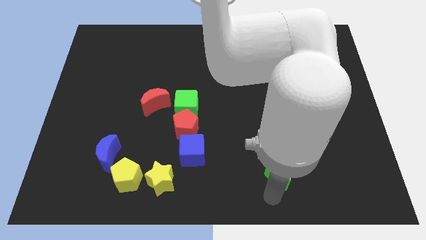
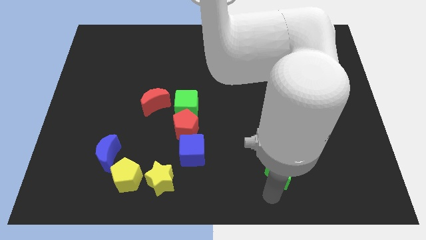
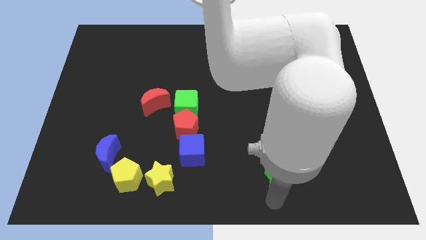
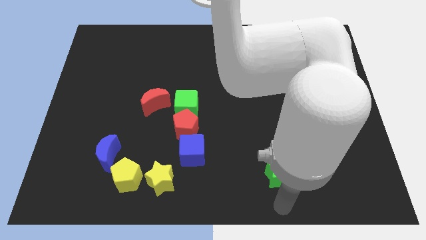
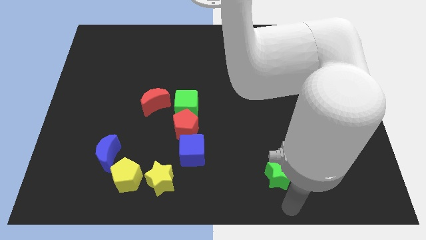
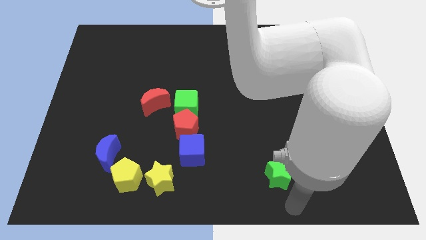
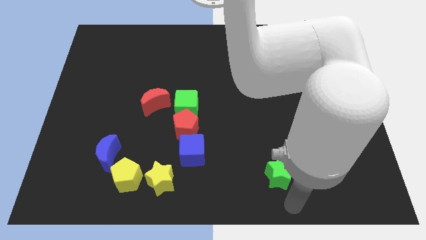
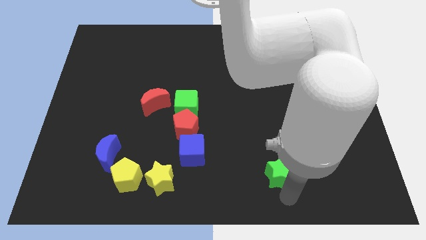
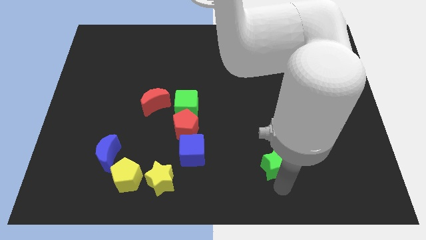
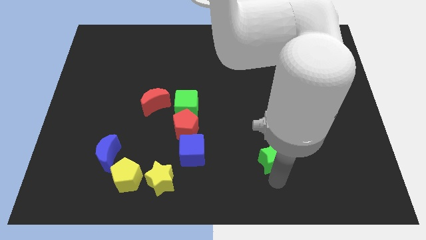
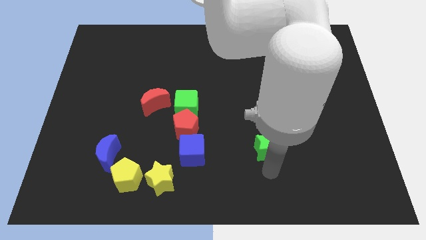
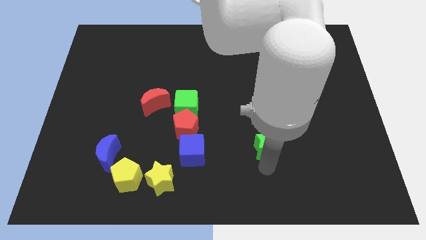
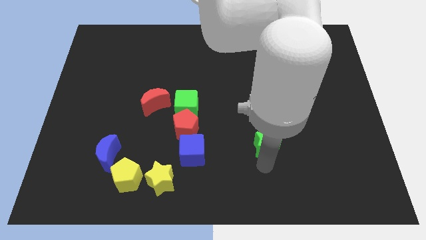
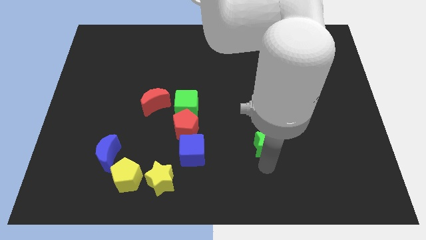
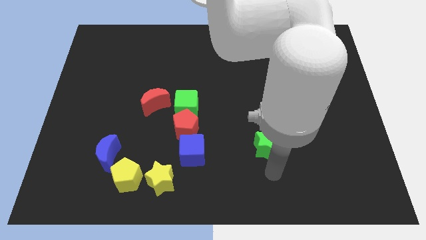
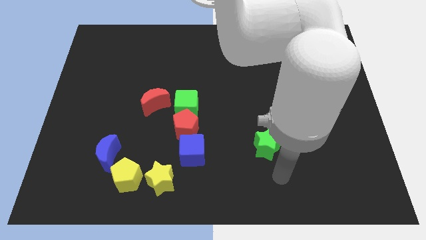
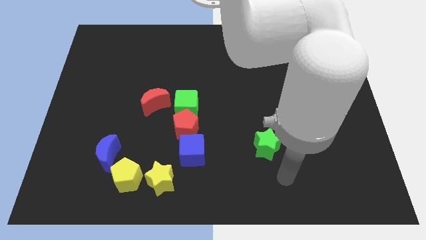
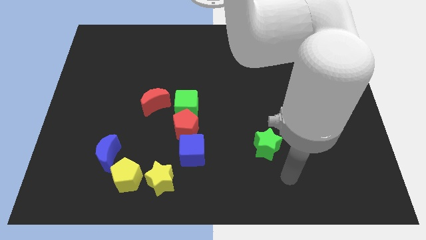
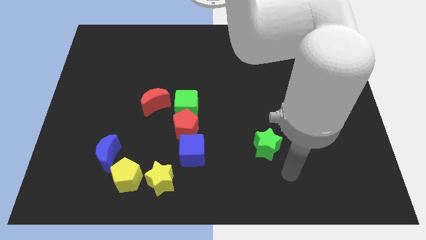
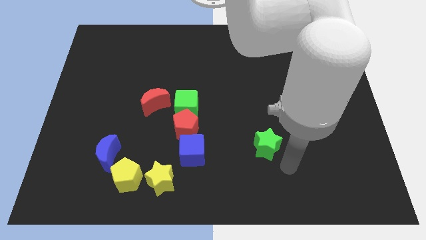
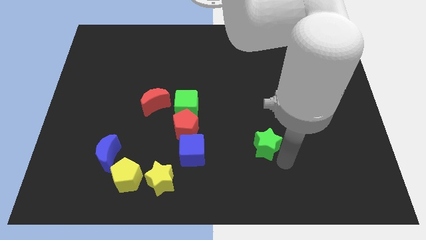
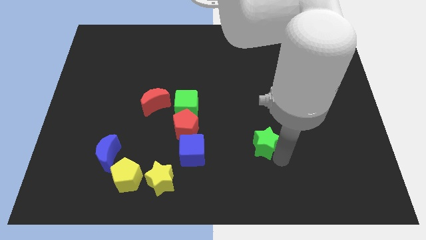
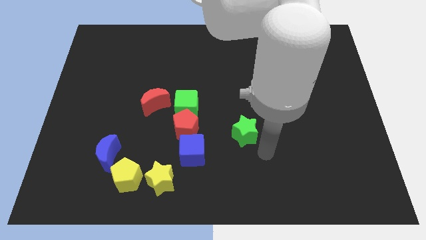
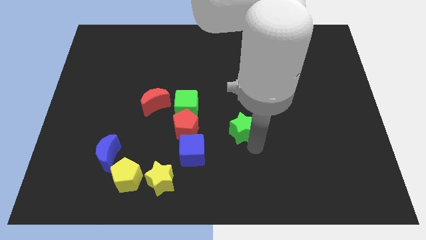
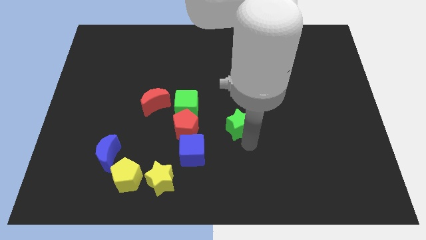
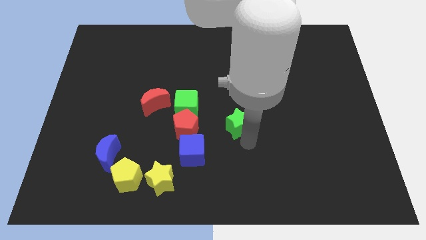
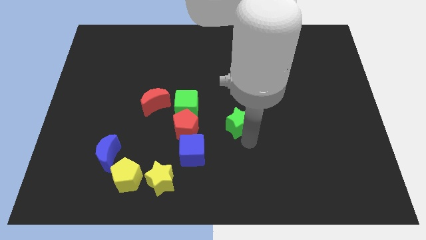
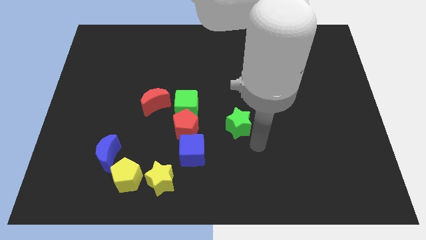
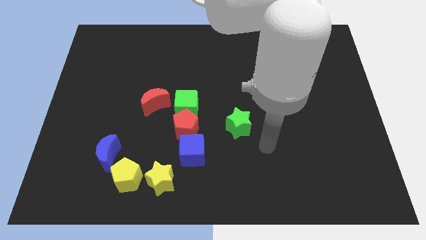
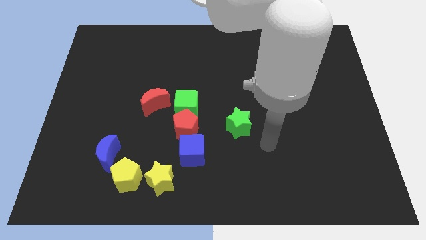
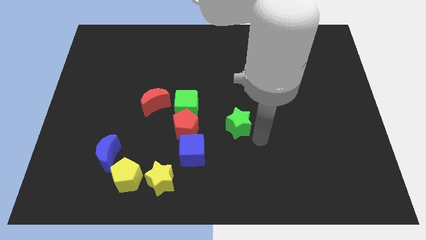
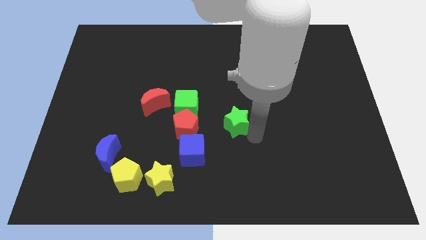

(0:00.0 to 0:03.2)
move green star to the right side of the red pentagon

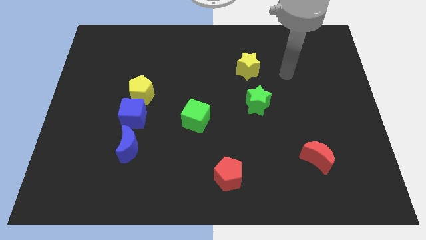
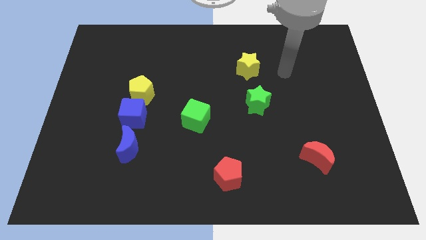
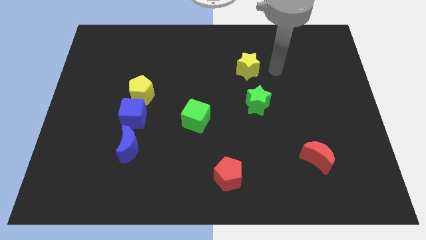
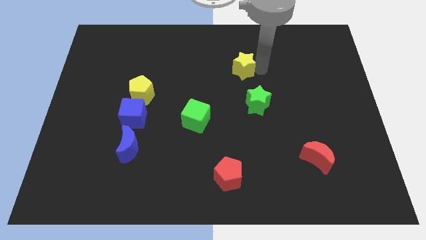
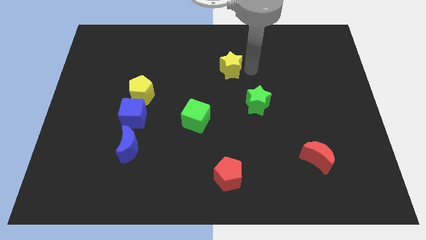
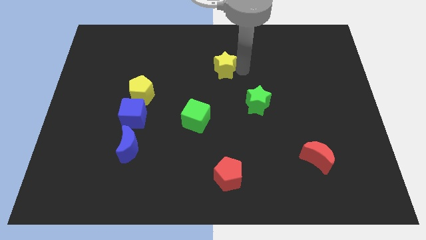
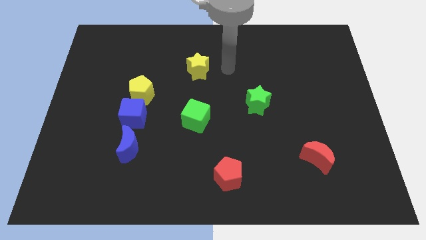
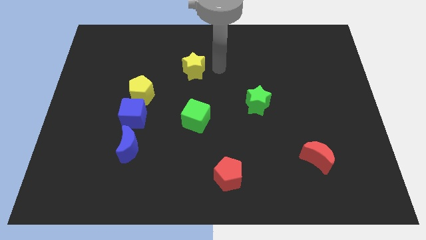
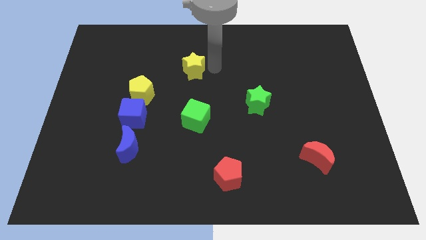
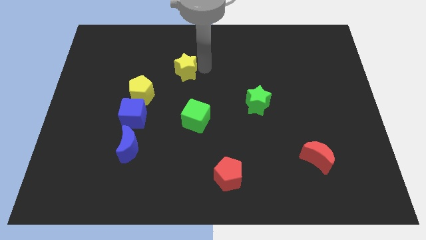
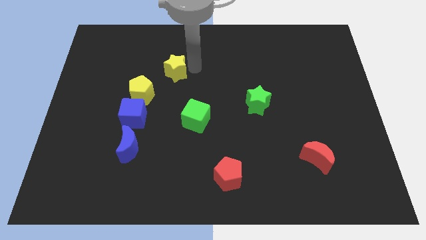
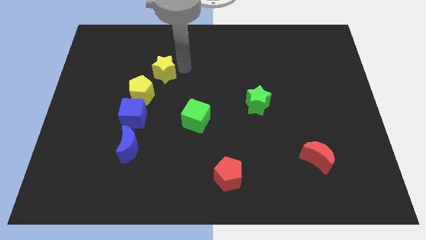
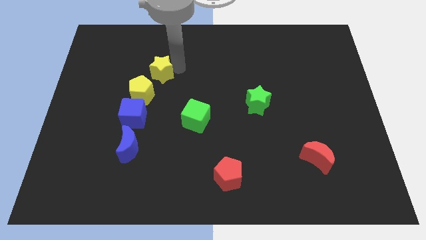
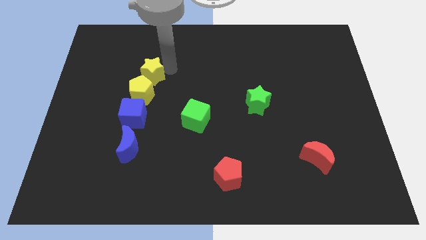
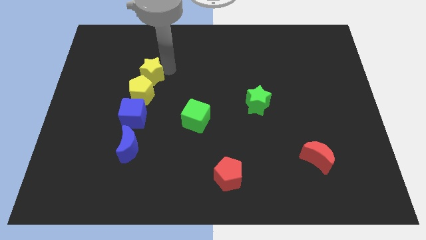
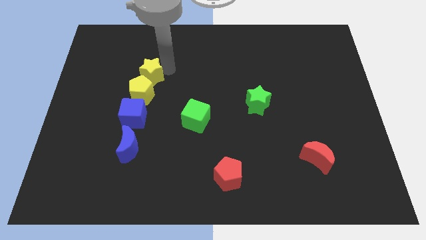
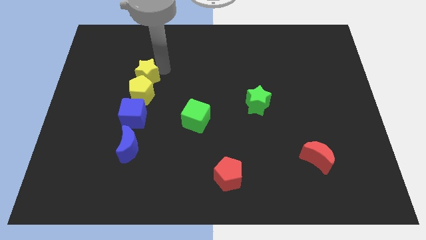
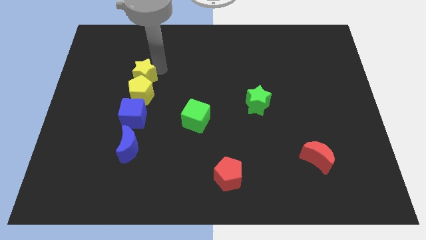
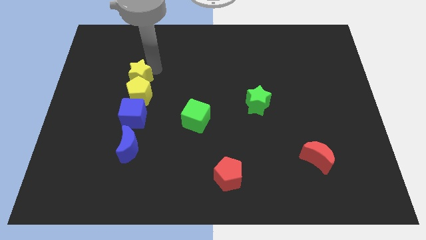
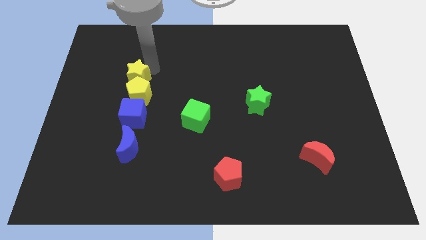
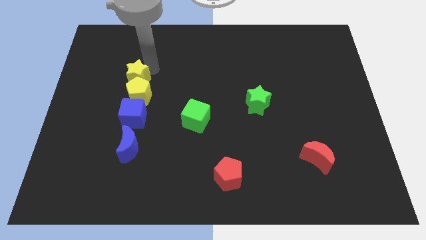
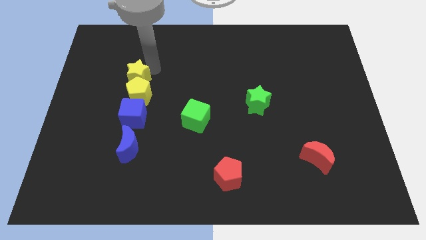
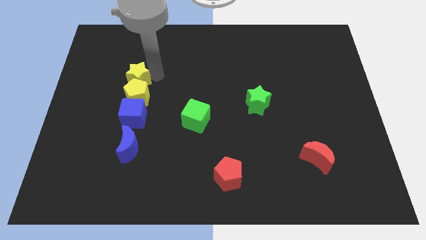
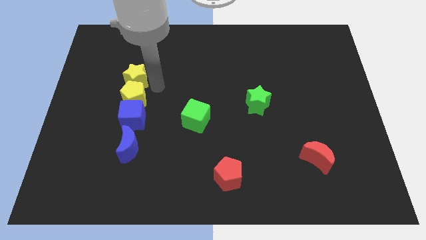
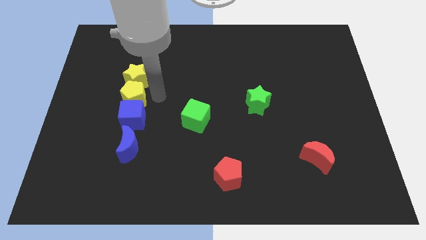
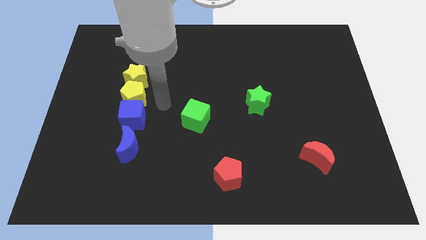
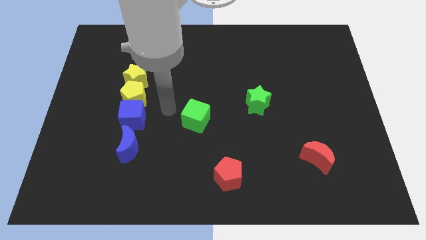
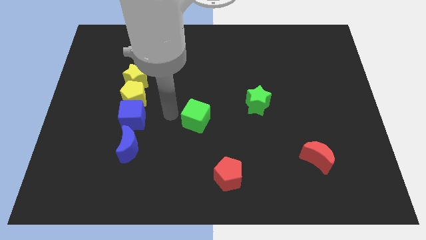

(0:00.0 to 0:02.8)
push the yellow star into the top of the yellow pentagon

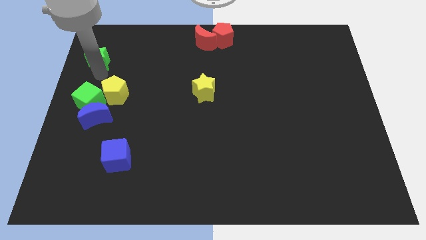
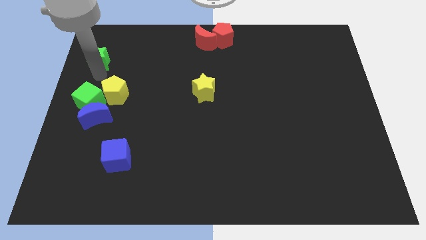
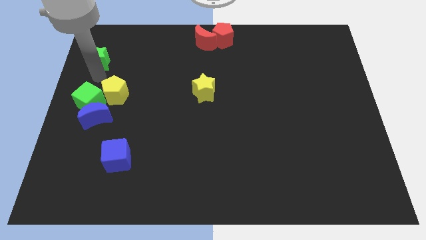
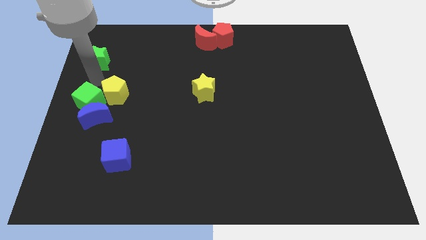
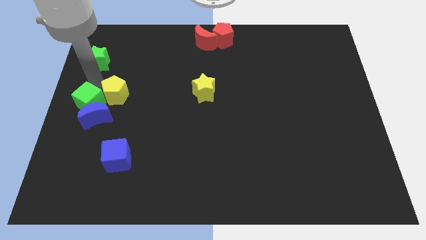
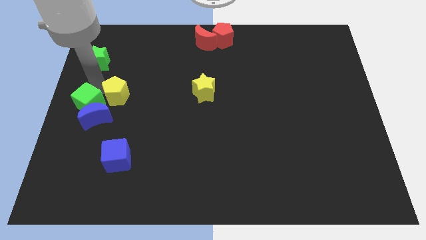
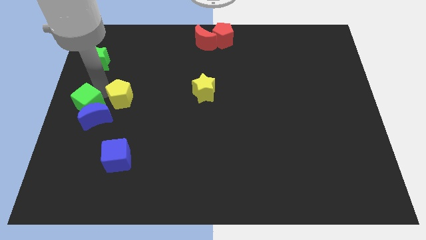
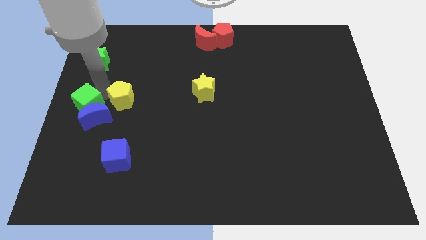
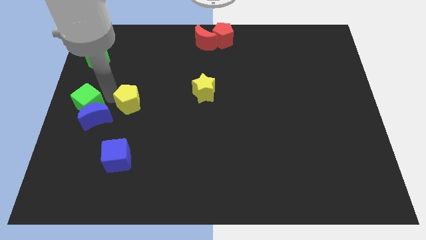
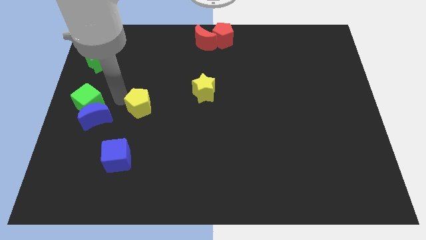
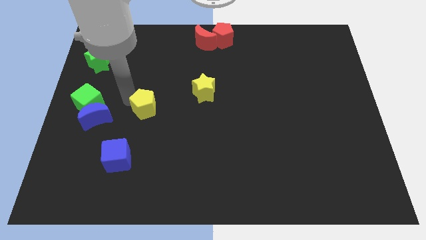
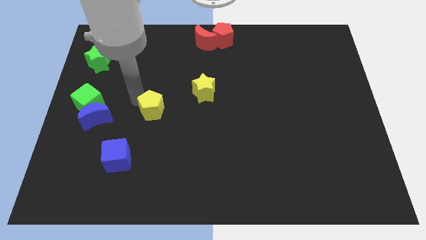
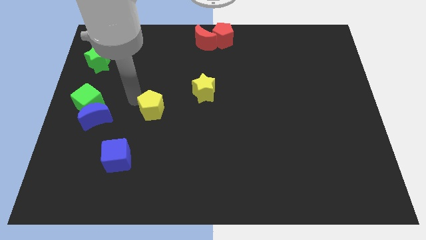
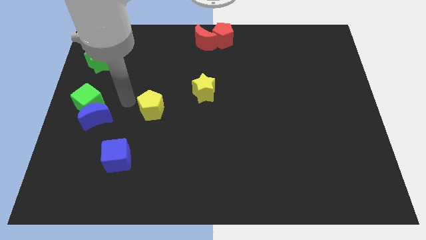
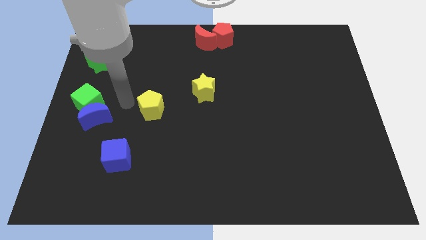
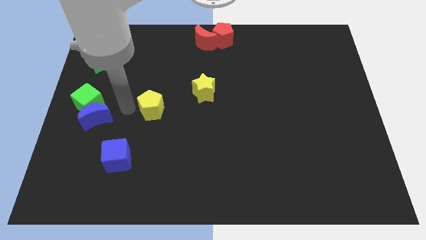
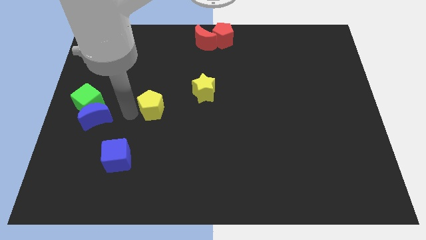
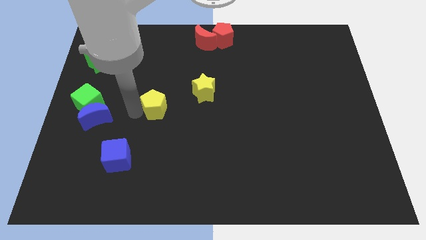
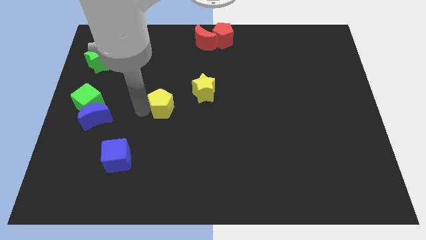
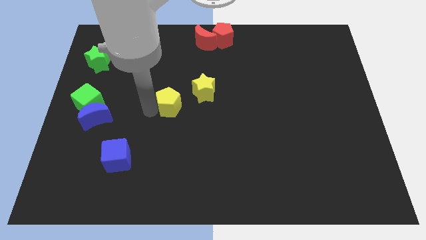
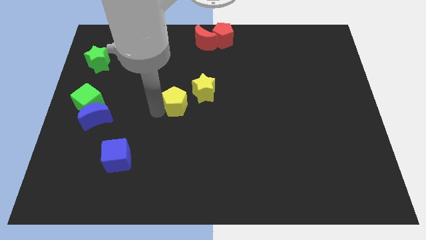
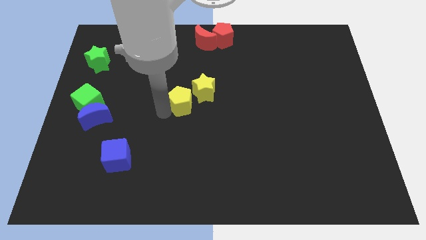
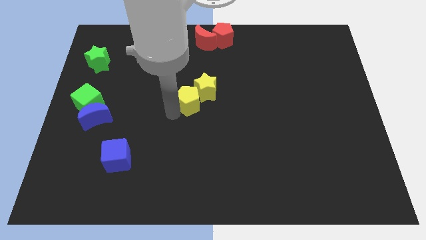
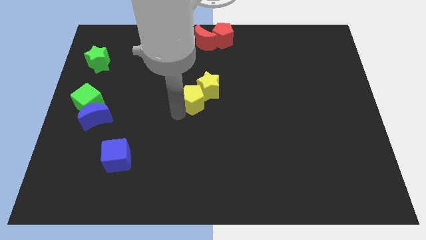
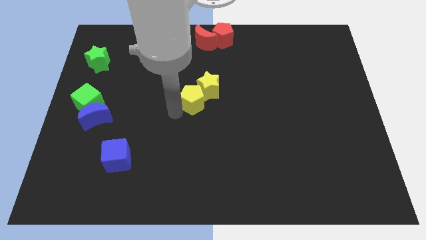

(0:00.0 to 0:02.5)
push the yellow pentagon to the bottom left of the yellow star

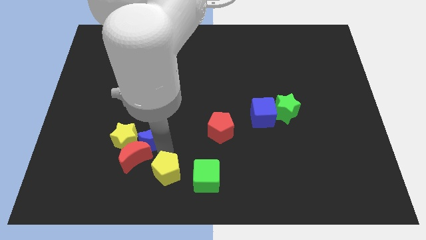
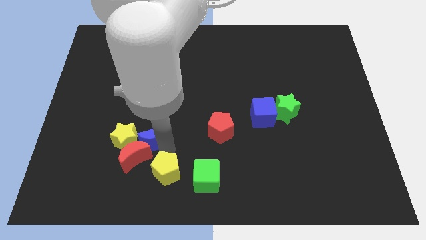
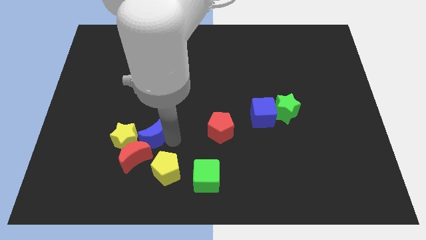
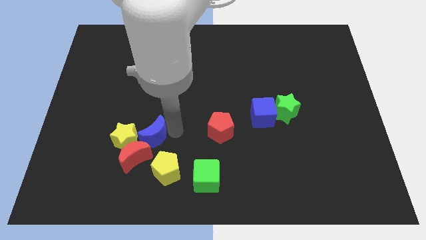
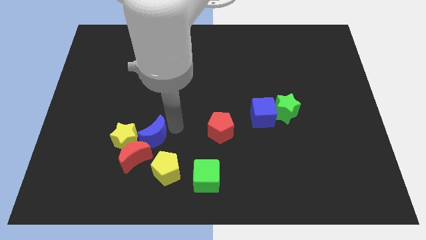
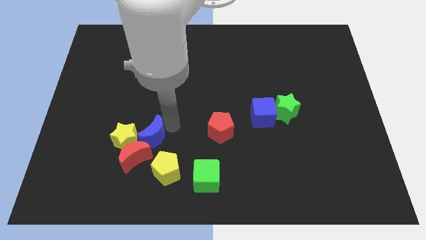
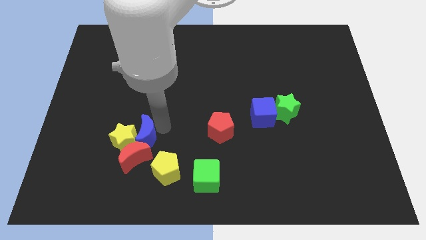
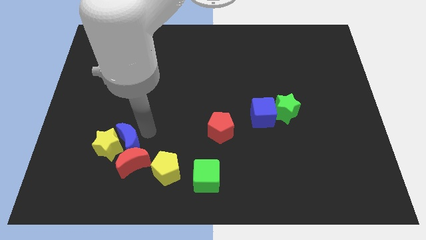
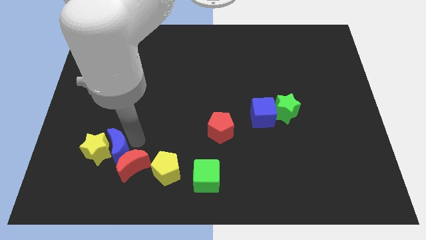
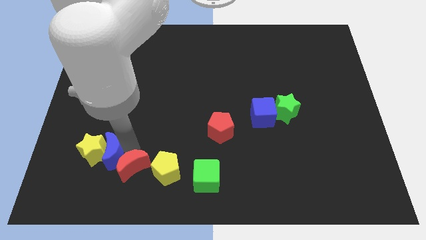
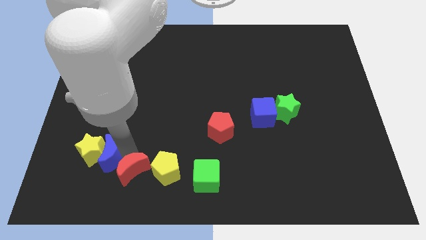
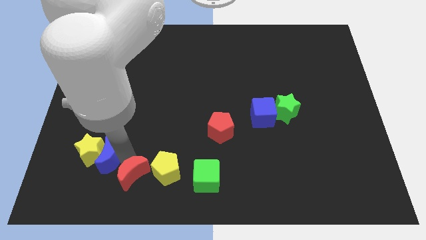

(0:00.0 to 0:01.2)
push the blue crescent into the yellow star
